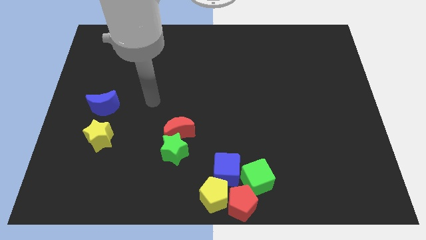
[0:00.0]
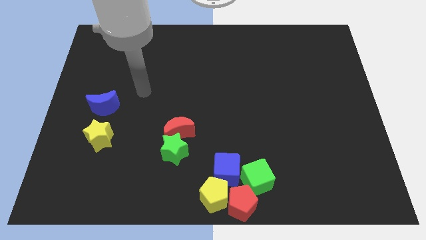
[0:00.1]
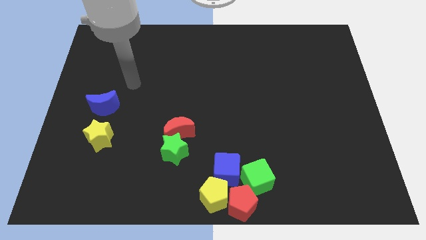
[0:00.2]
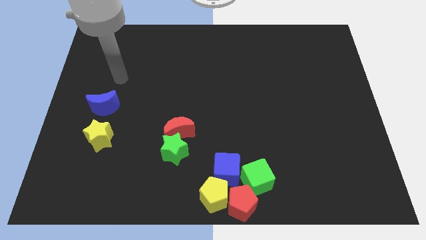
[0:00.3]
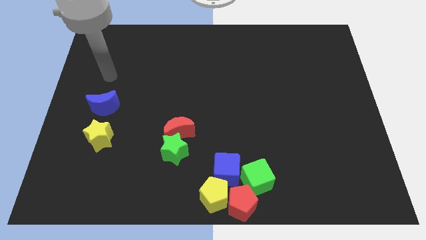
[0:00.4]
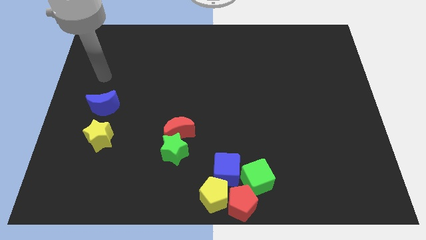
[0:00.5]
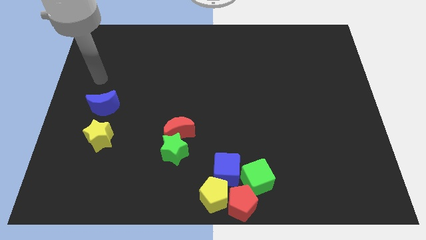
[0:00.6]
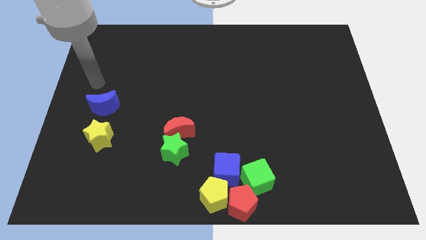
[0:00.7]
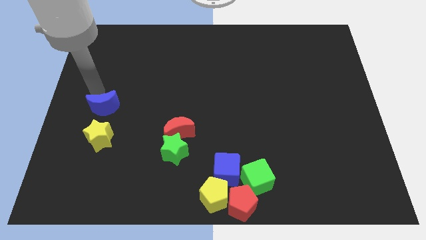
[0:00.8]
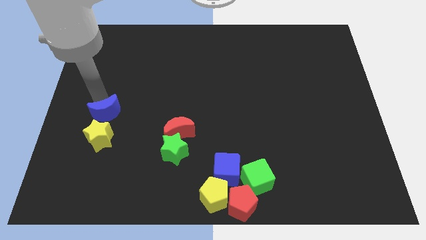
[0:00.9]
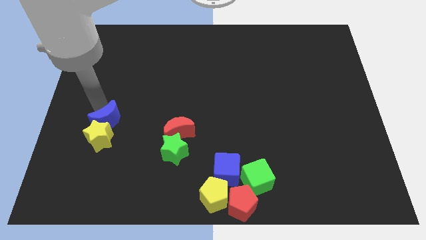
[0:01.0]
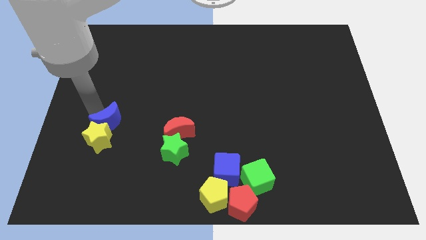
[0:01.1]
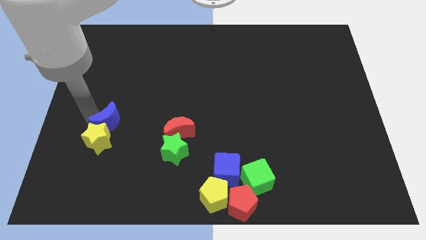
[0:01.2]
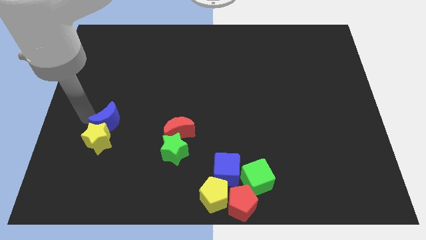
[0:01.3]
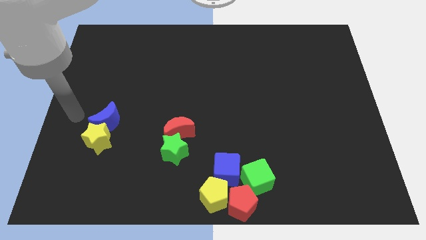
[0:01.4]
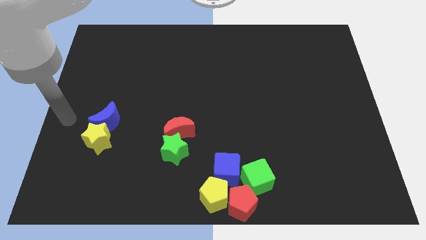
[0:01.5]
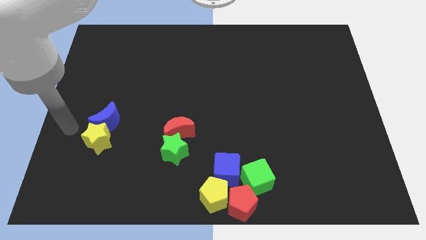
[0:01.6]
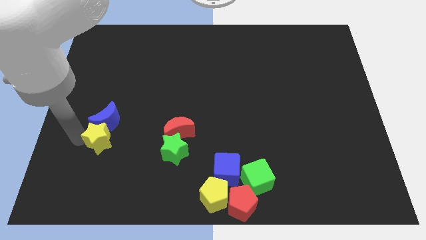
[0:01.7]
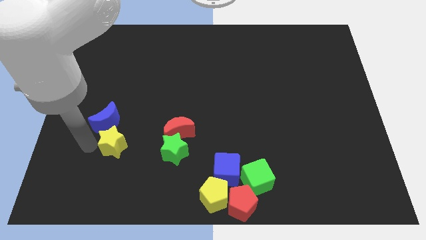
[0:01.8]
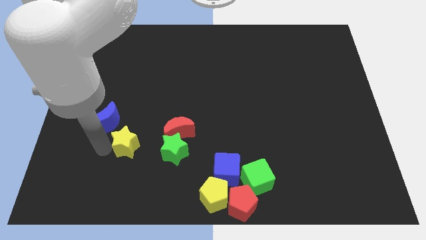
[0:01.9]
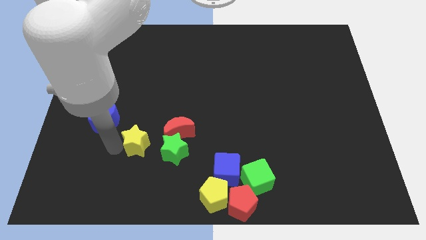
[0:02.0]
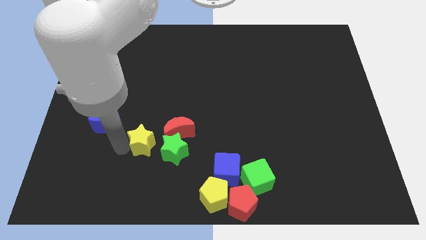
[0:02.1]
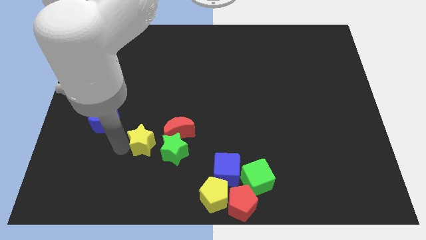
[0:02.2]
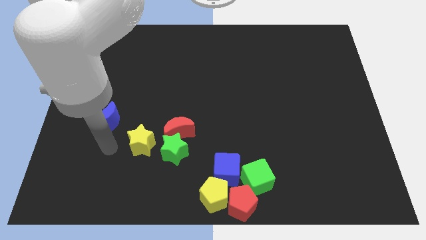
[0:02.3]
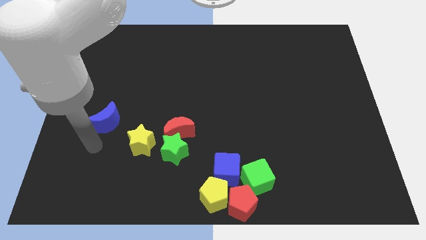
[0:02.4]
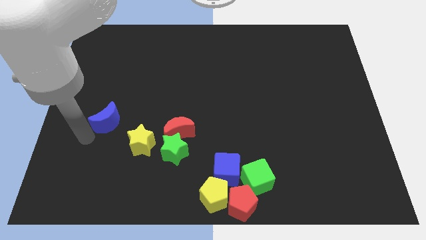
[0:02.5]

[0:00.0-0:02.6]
place the yellow star on left of the green star

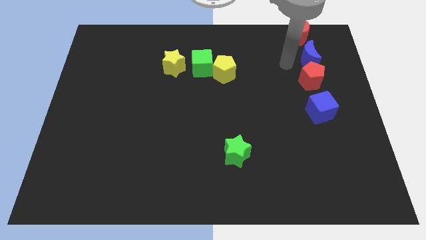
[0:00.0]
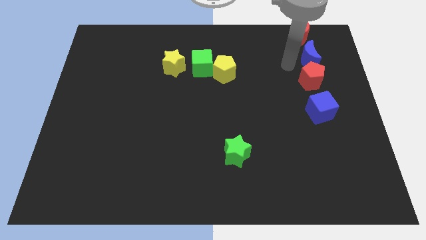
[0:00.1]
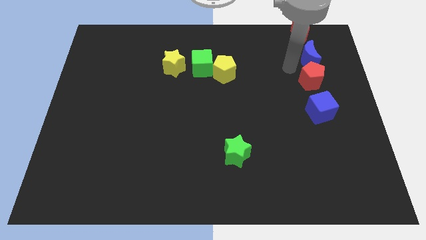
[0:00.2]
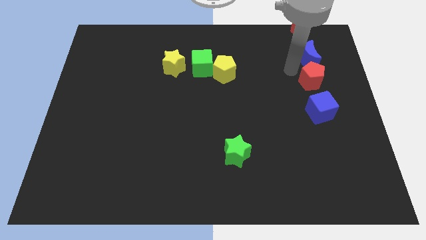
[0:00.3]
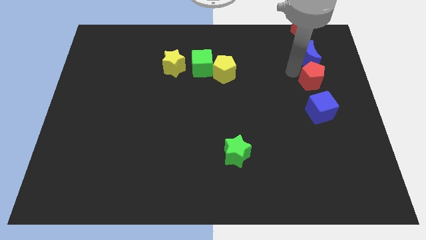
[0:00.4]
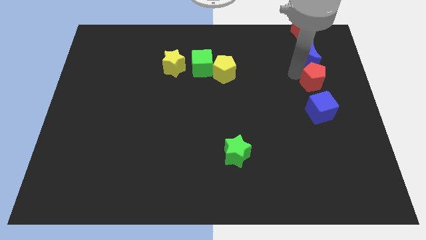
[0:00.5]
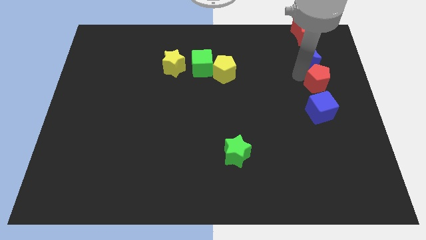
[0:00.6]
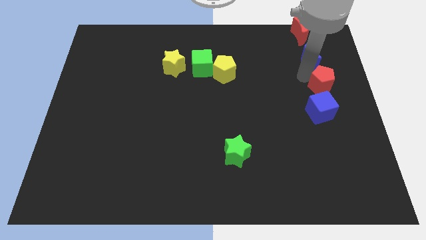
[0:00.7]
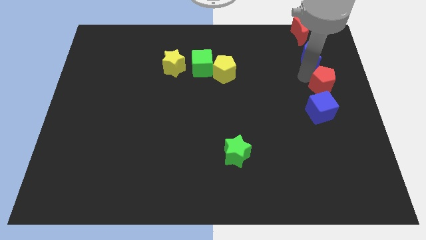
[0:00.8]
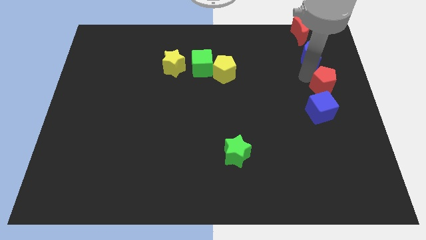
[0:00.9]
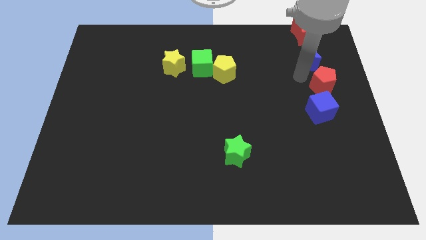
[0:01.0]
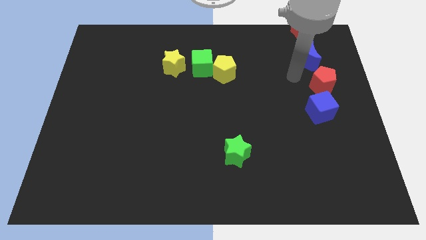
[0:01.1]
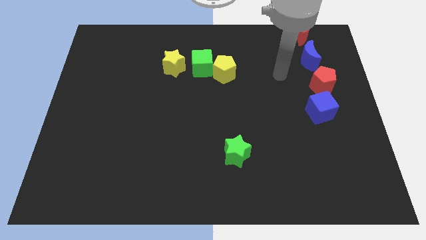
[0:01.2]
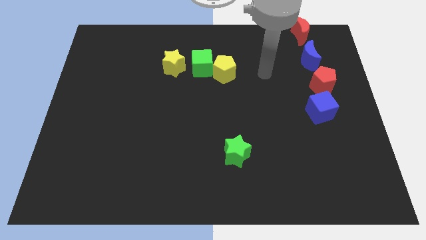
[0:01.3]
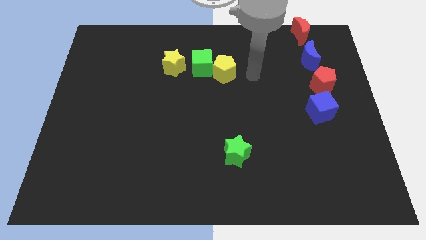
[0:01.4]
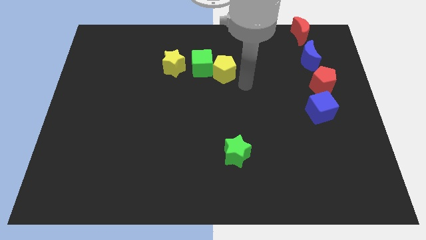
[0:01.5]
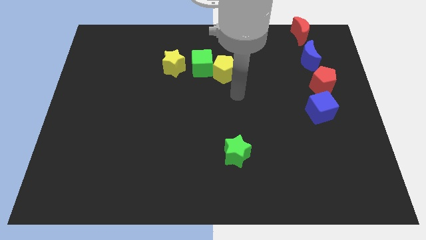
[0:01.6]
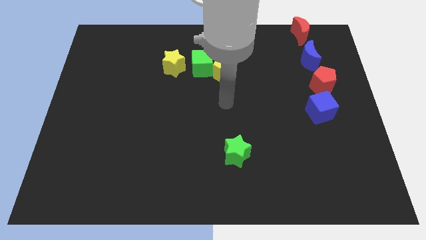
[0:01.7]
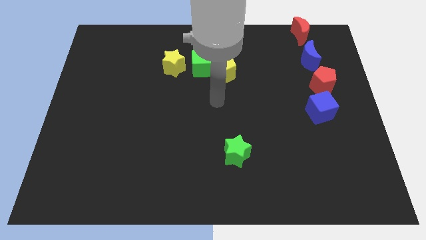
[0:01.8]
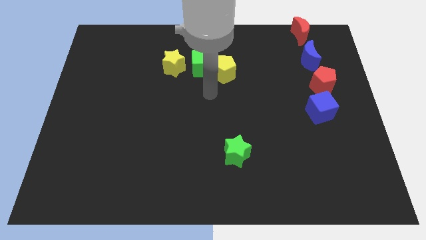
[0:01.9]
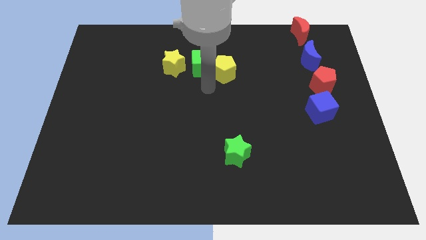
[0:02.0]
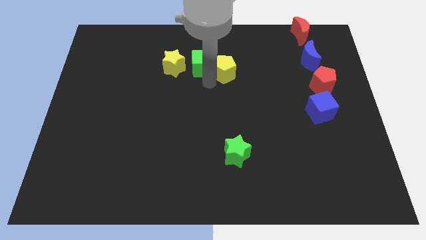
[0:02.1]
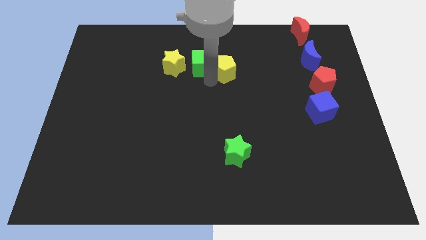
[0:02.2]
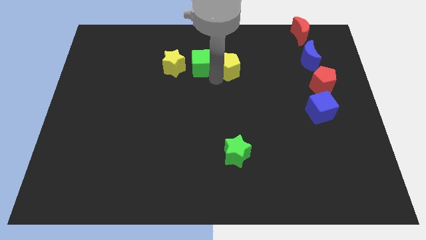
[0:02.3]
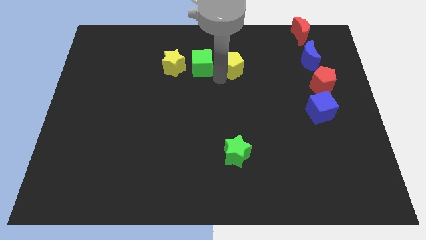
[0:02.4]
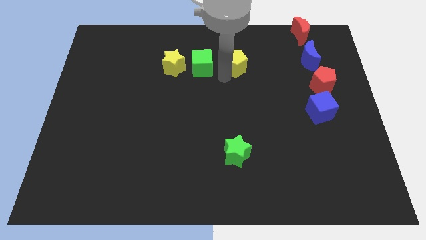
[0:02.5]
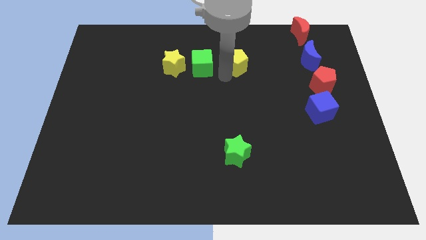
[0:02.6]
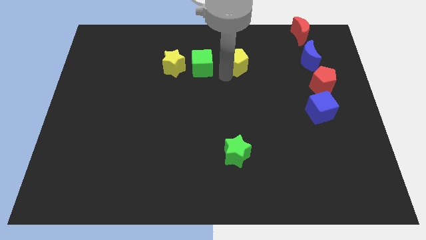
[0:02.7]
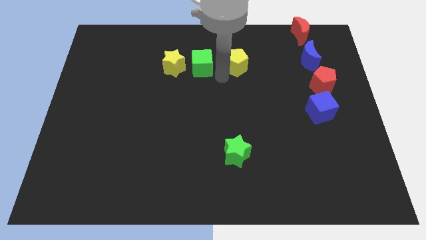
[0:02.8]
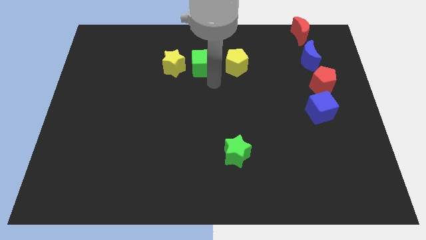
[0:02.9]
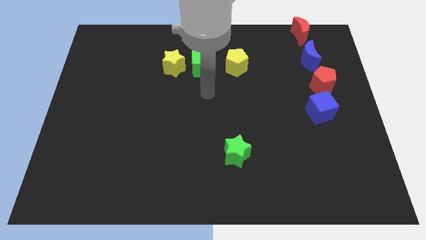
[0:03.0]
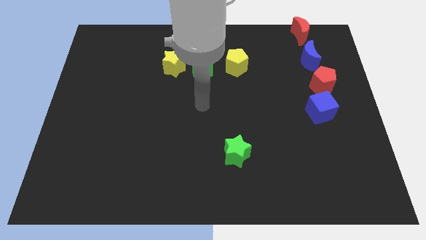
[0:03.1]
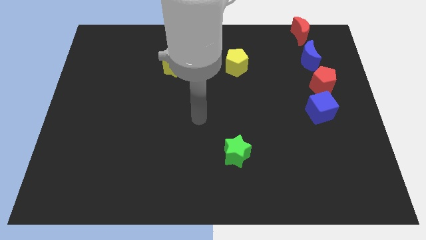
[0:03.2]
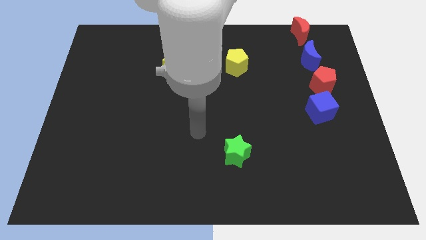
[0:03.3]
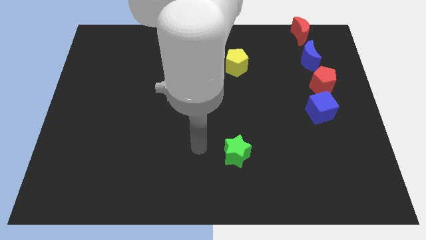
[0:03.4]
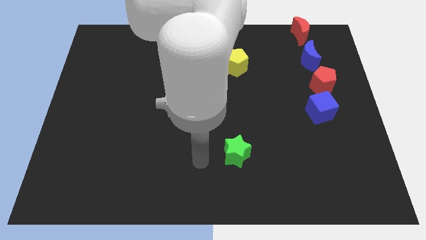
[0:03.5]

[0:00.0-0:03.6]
move the yellow pentagon slightly right

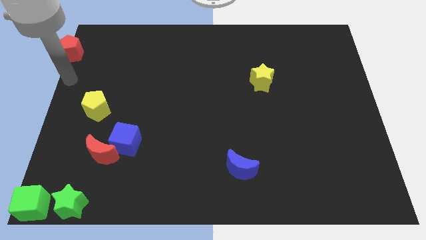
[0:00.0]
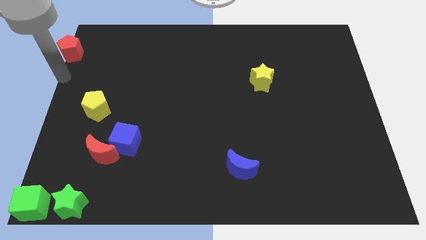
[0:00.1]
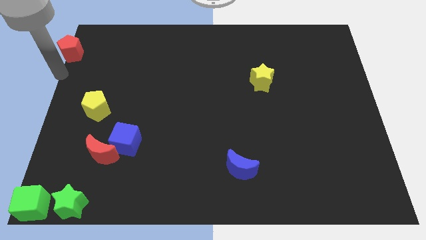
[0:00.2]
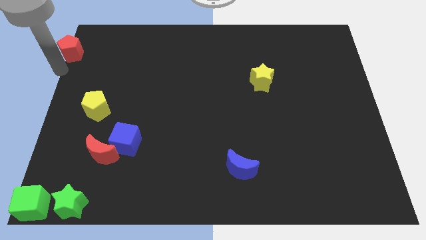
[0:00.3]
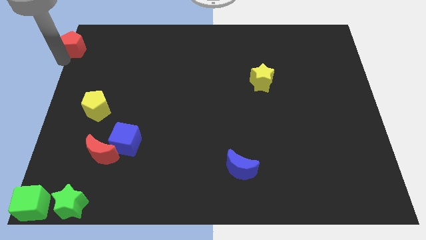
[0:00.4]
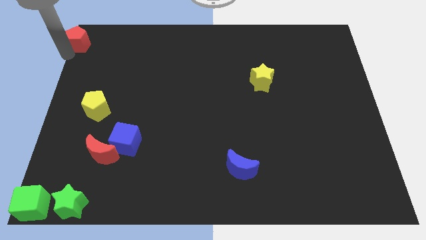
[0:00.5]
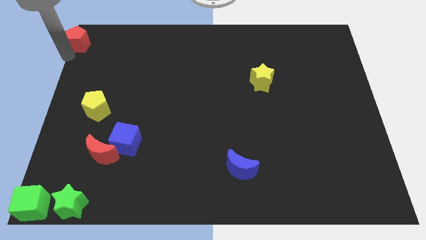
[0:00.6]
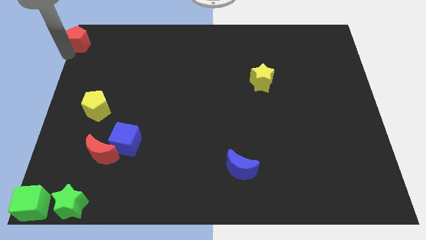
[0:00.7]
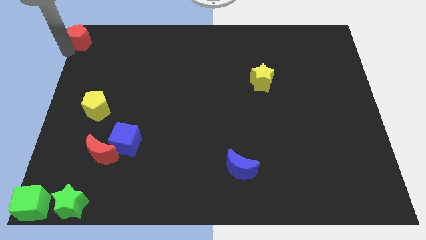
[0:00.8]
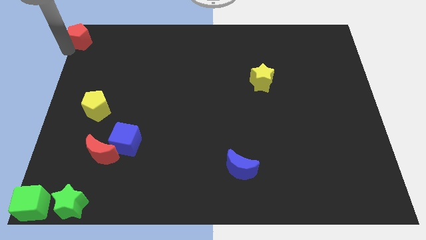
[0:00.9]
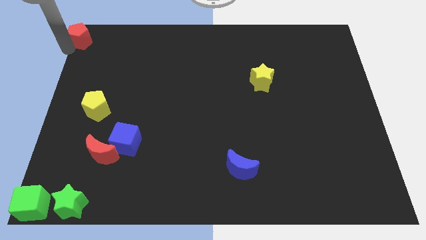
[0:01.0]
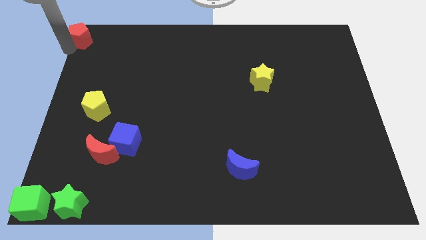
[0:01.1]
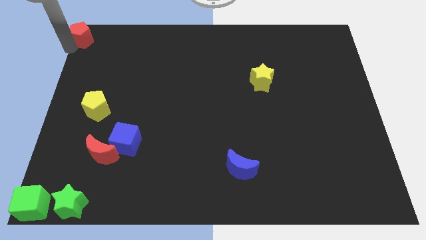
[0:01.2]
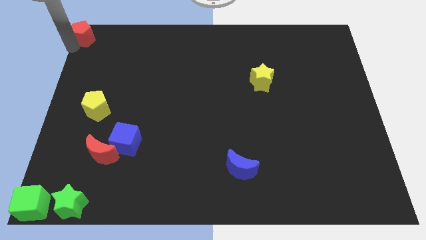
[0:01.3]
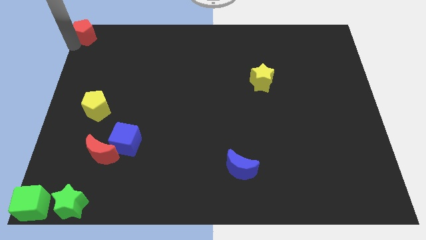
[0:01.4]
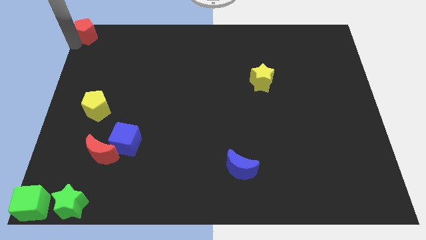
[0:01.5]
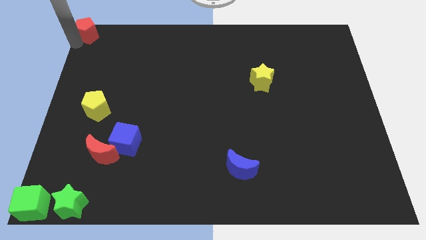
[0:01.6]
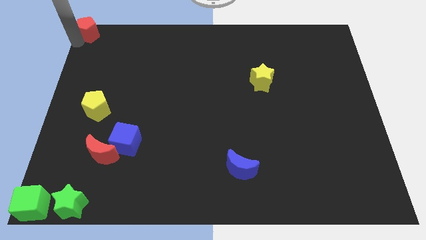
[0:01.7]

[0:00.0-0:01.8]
push the red pentagon to the top right corner of the board

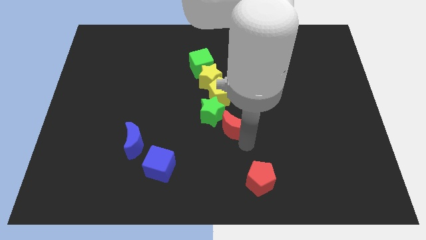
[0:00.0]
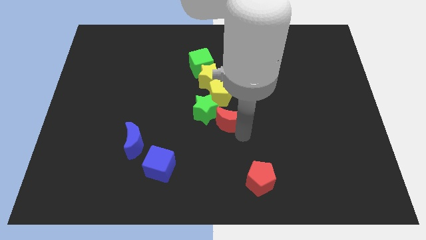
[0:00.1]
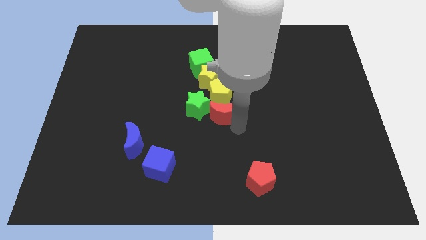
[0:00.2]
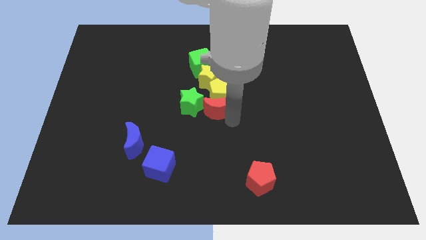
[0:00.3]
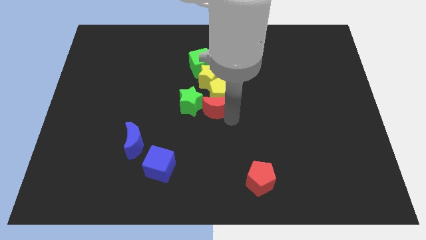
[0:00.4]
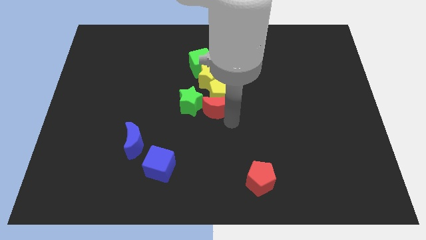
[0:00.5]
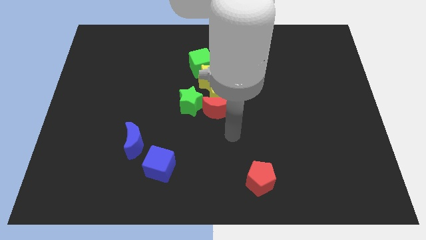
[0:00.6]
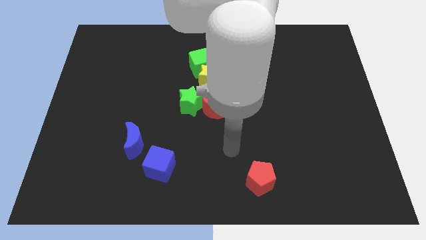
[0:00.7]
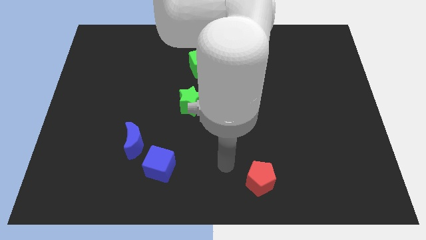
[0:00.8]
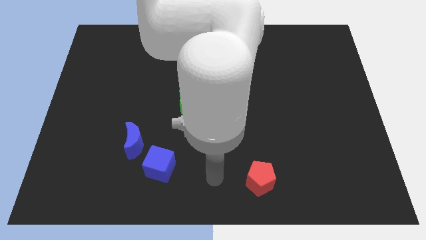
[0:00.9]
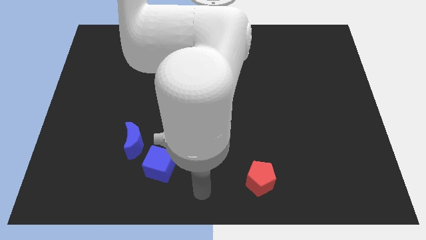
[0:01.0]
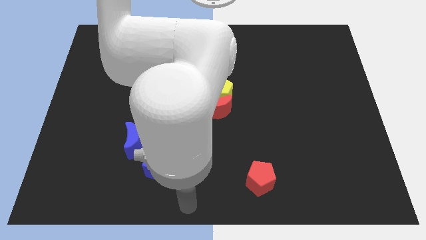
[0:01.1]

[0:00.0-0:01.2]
put red moon into the yellow pentagon
